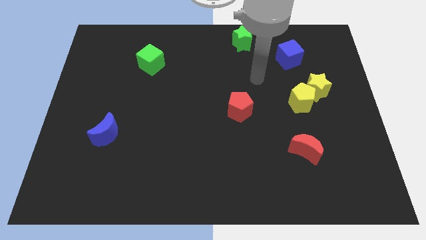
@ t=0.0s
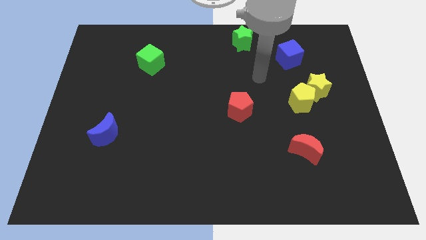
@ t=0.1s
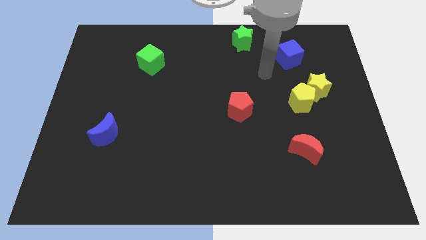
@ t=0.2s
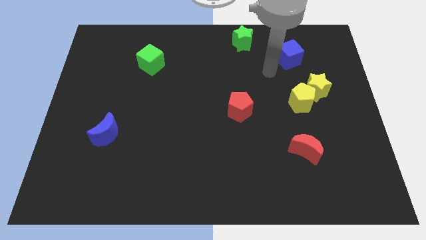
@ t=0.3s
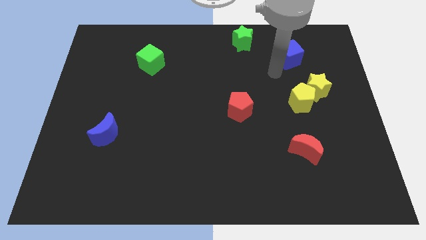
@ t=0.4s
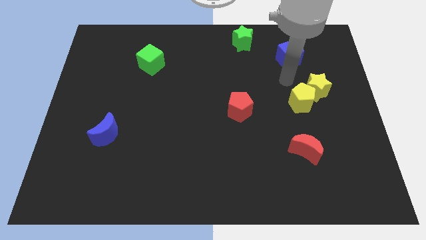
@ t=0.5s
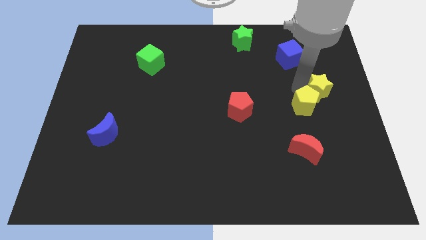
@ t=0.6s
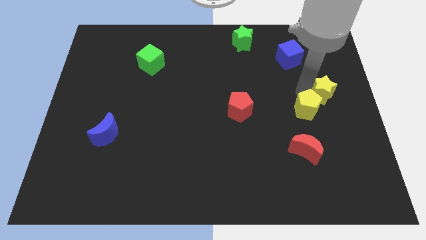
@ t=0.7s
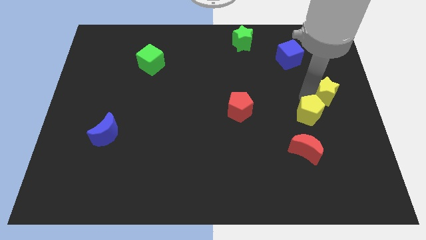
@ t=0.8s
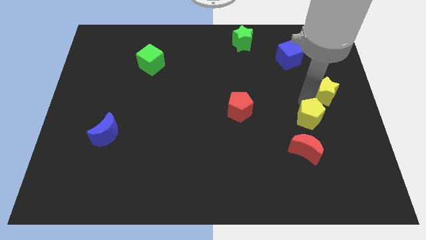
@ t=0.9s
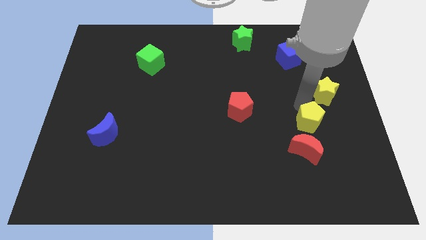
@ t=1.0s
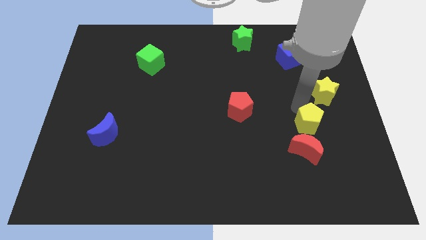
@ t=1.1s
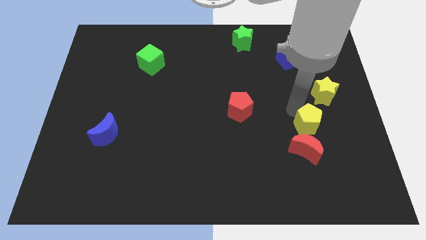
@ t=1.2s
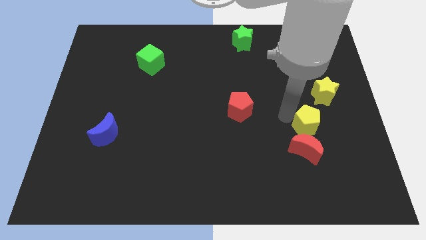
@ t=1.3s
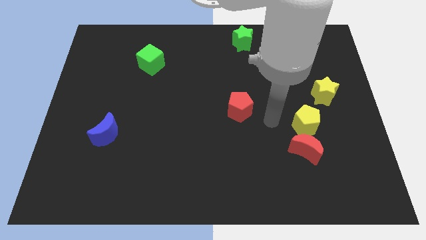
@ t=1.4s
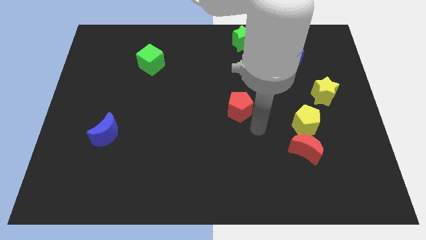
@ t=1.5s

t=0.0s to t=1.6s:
place the yellow pentagon above the red moon

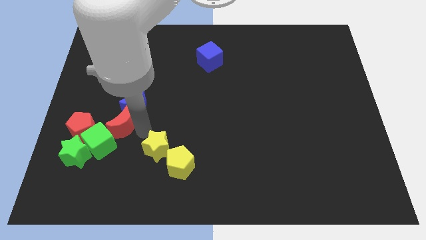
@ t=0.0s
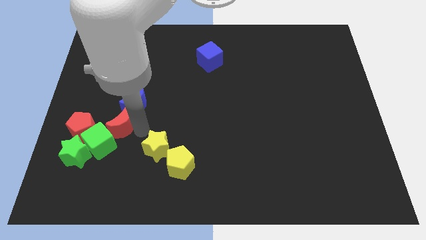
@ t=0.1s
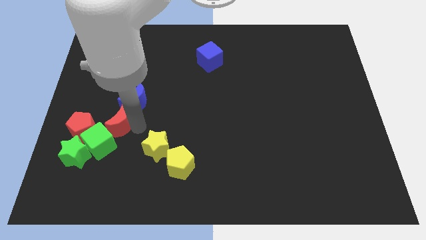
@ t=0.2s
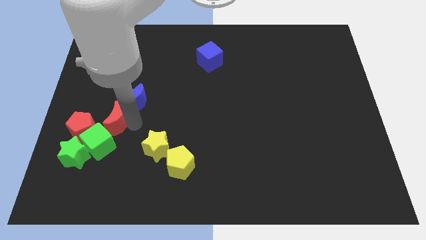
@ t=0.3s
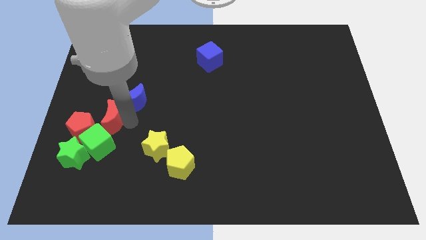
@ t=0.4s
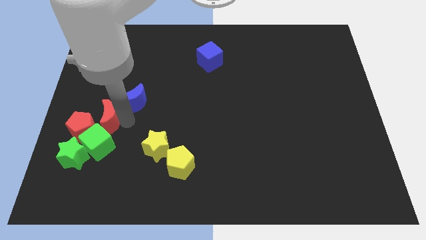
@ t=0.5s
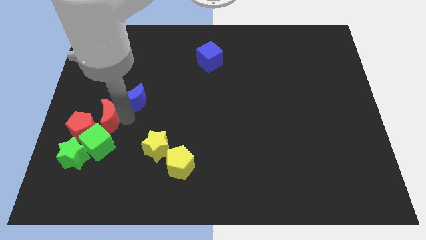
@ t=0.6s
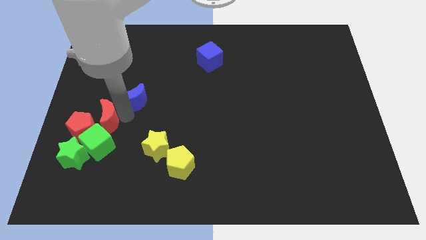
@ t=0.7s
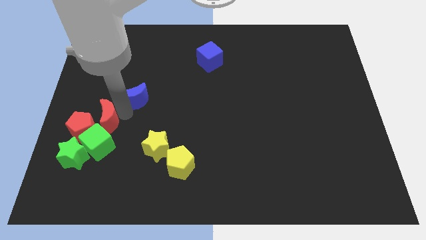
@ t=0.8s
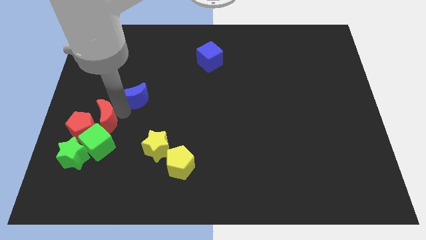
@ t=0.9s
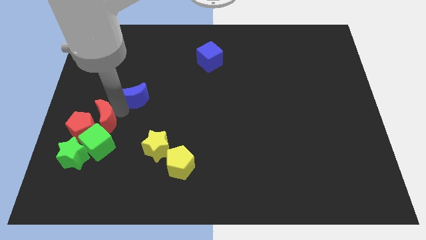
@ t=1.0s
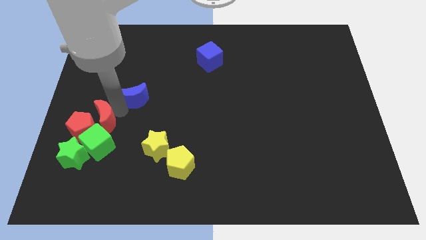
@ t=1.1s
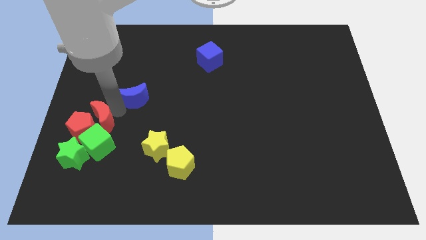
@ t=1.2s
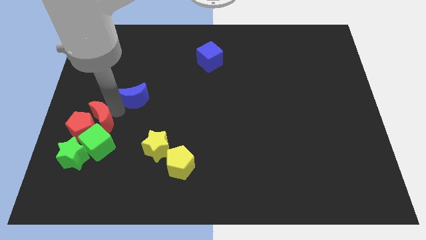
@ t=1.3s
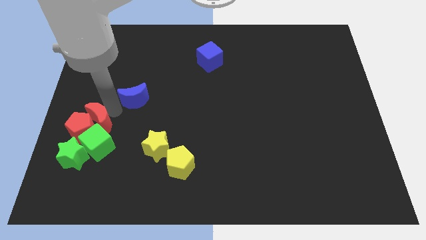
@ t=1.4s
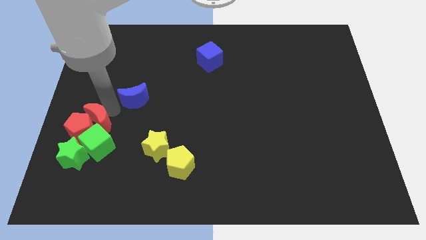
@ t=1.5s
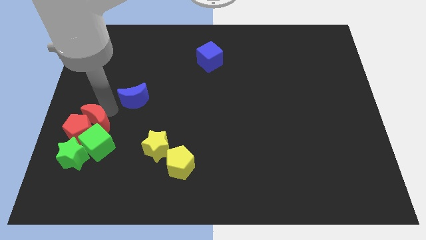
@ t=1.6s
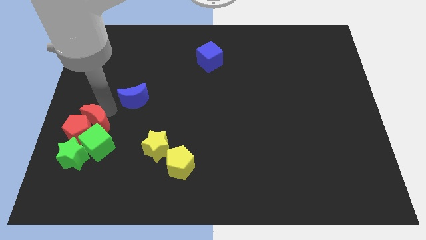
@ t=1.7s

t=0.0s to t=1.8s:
push the red crescent into the top of the red pentagon and green cube

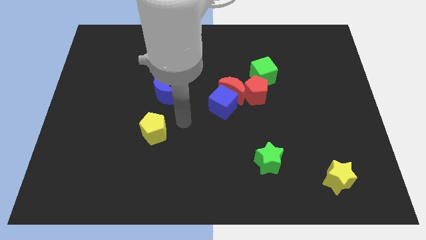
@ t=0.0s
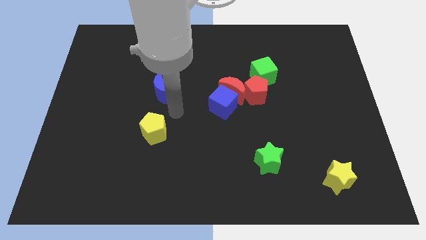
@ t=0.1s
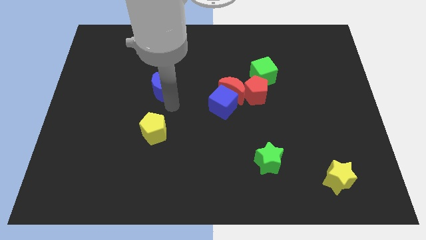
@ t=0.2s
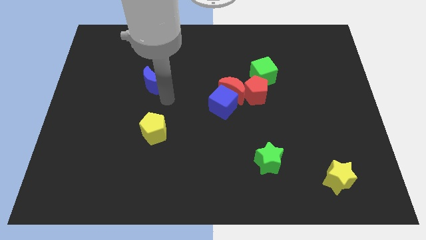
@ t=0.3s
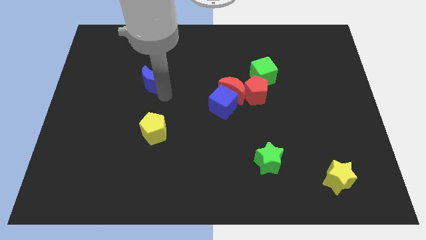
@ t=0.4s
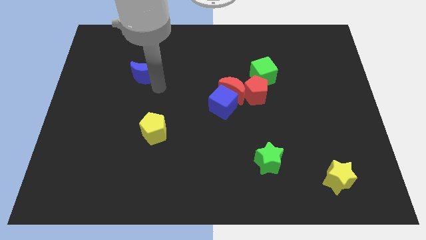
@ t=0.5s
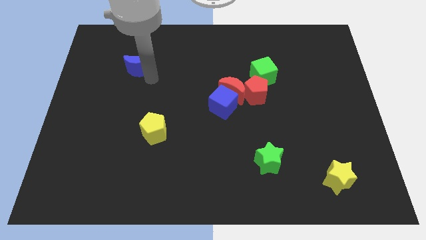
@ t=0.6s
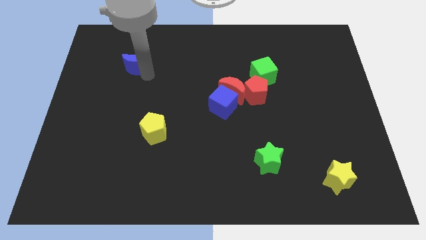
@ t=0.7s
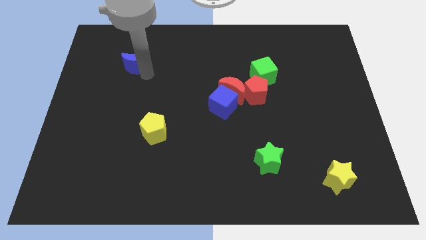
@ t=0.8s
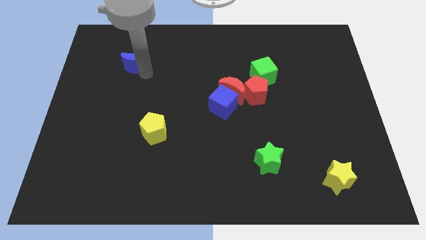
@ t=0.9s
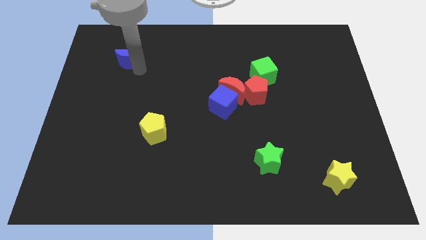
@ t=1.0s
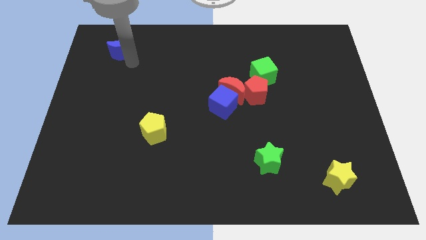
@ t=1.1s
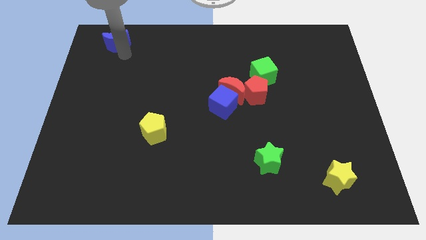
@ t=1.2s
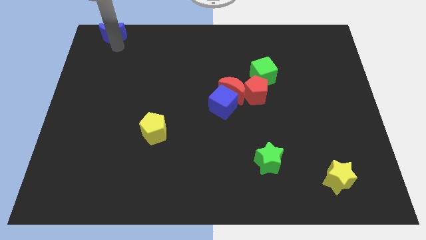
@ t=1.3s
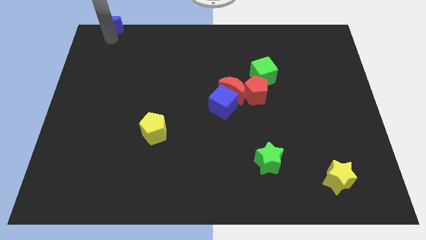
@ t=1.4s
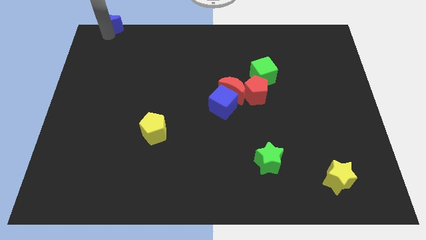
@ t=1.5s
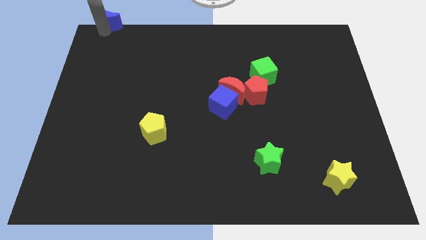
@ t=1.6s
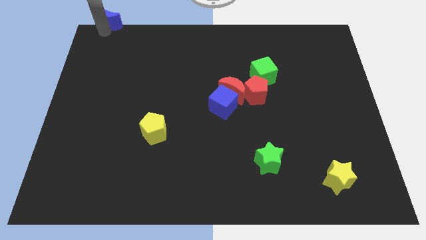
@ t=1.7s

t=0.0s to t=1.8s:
move the blue crescent to the top left corner of the board

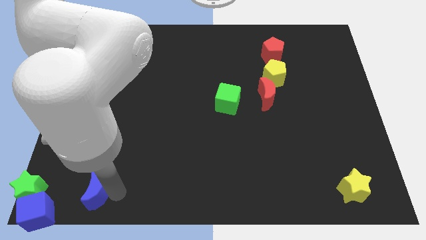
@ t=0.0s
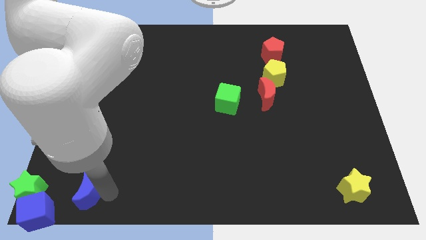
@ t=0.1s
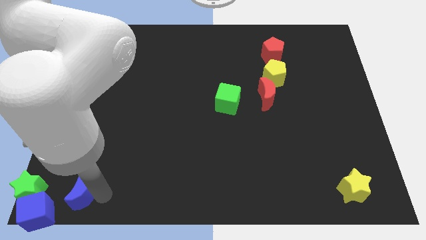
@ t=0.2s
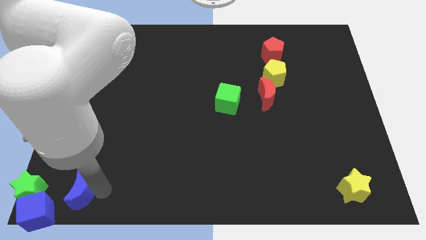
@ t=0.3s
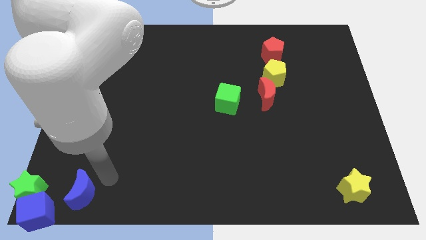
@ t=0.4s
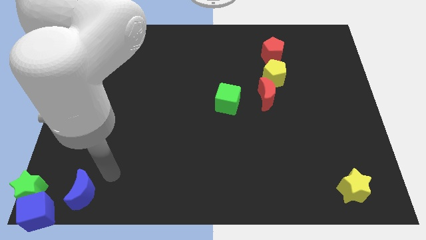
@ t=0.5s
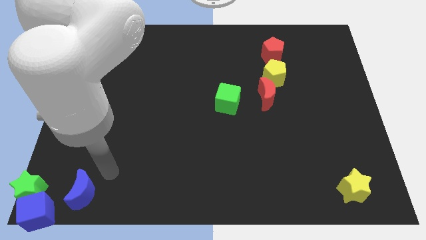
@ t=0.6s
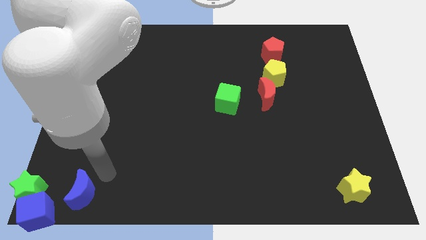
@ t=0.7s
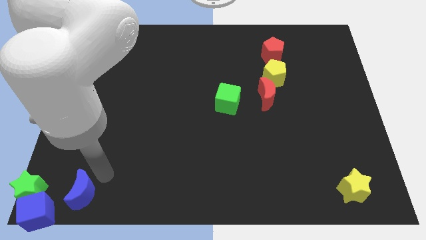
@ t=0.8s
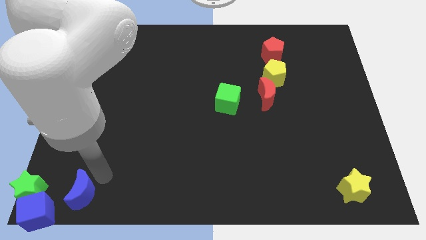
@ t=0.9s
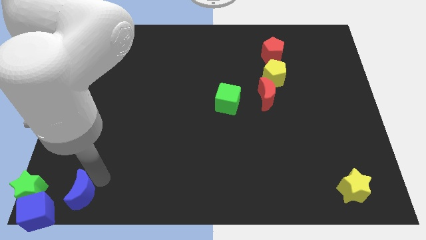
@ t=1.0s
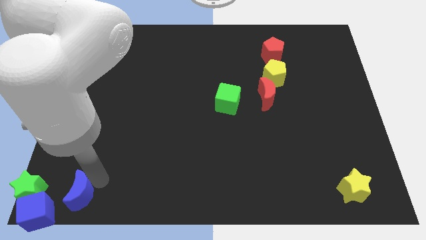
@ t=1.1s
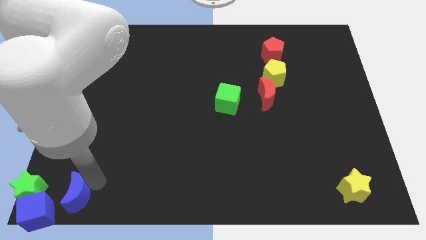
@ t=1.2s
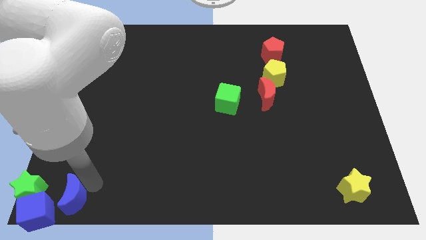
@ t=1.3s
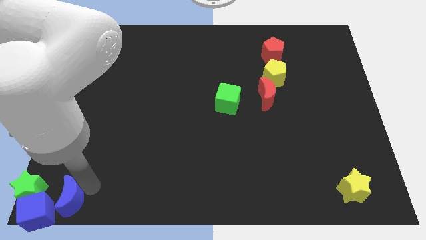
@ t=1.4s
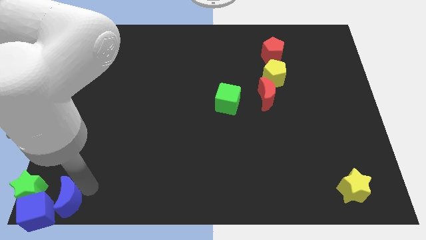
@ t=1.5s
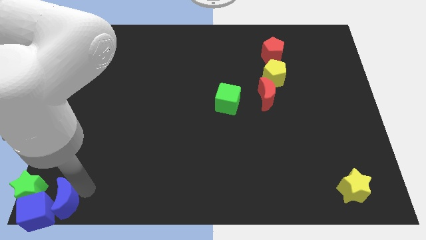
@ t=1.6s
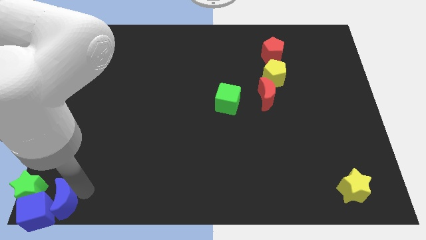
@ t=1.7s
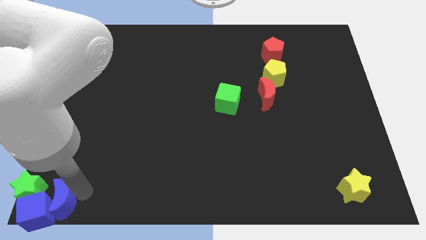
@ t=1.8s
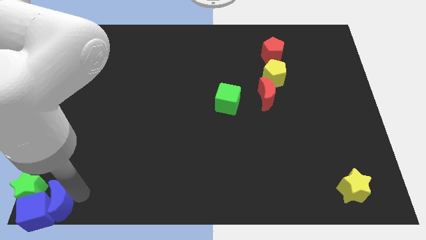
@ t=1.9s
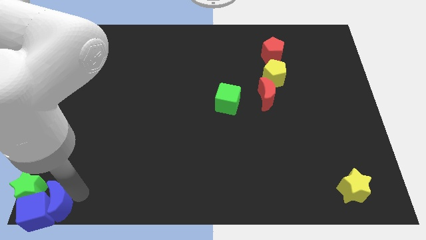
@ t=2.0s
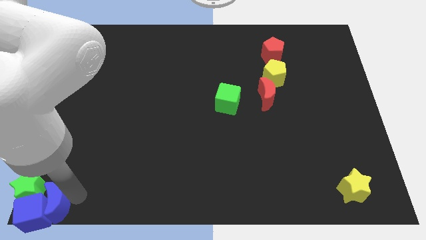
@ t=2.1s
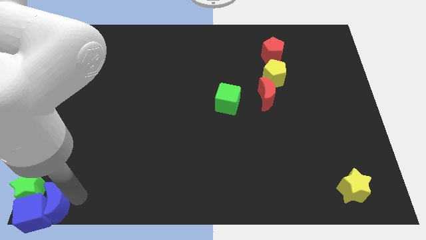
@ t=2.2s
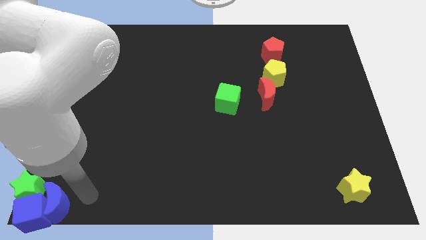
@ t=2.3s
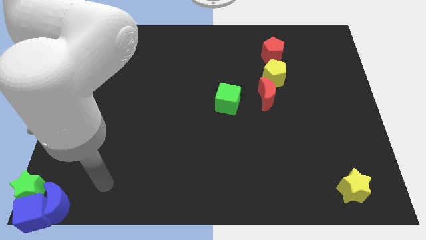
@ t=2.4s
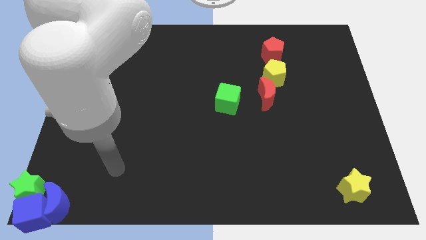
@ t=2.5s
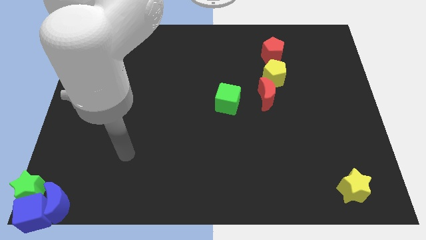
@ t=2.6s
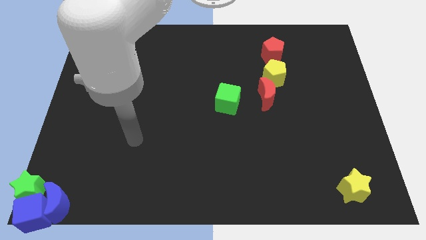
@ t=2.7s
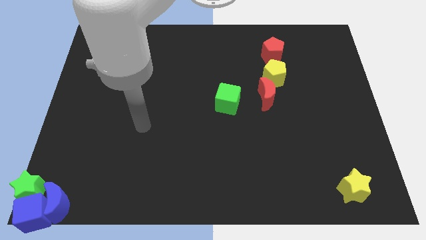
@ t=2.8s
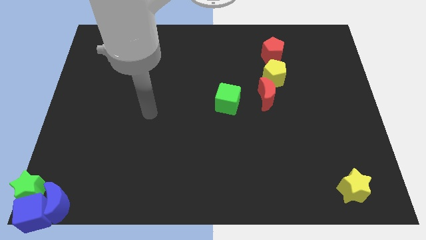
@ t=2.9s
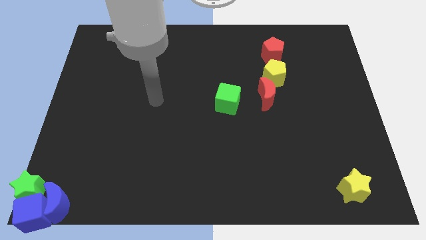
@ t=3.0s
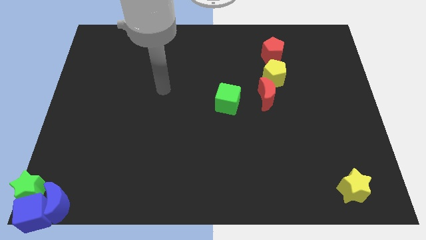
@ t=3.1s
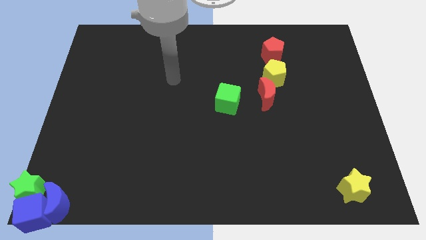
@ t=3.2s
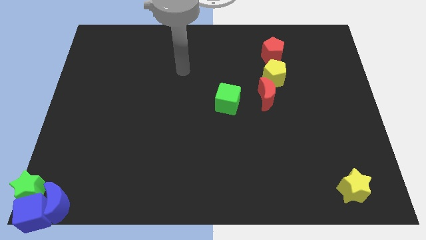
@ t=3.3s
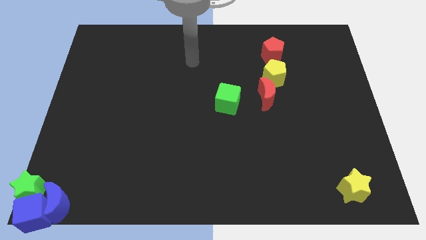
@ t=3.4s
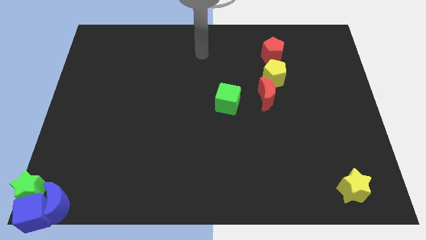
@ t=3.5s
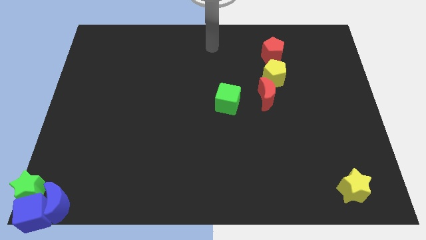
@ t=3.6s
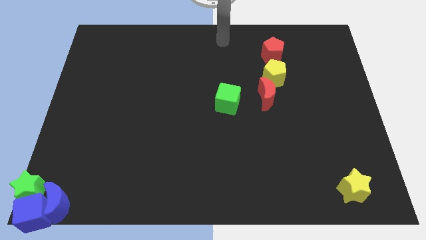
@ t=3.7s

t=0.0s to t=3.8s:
move the blue crescent into the blue cube and the green star
